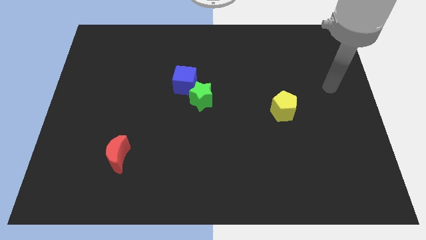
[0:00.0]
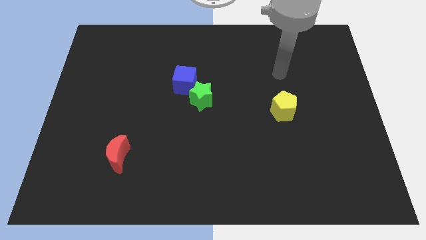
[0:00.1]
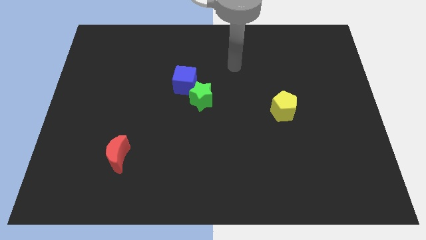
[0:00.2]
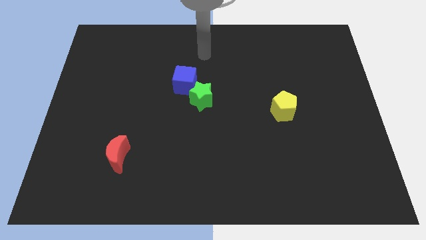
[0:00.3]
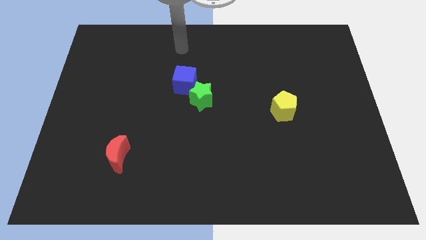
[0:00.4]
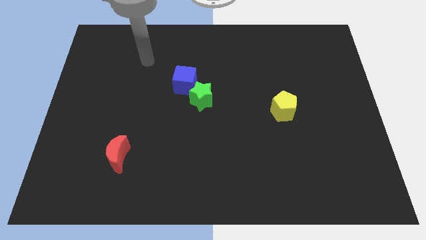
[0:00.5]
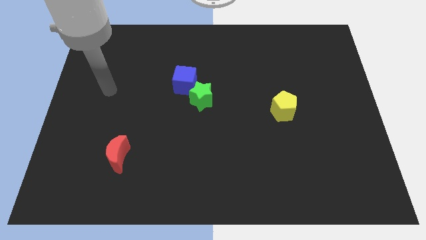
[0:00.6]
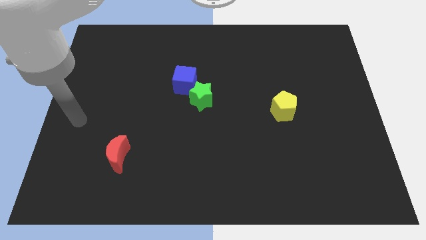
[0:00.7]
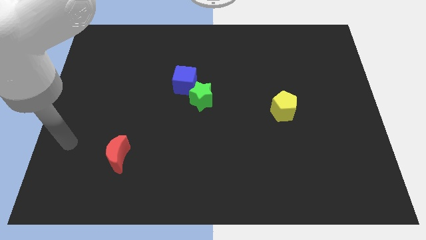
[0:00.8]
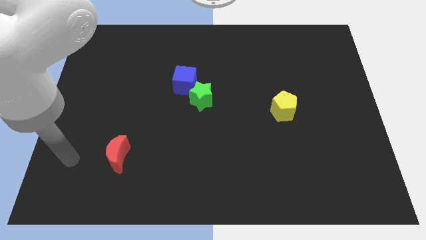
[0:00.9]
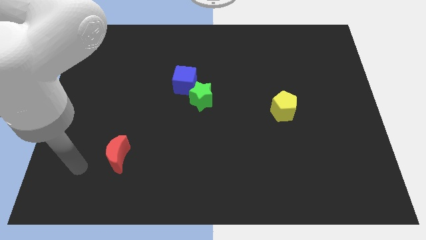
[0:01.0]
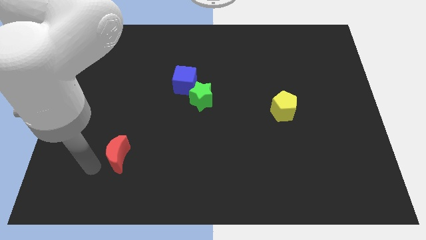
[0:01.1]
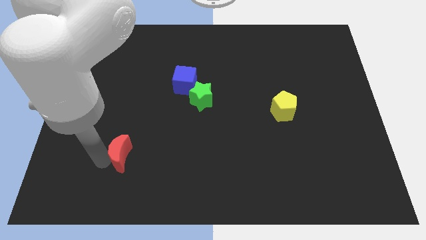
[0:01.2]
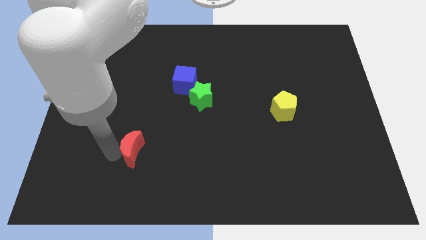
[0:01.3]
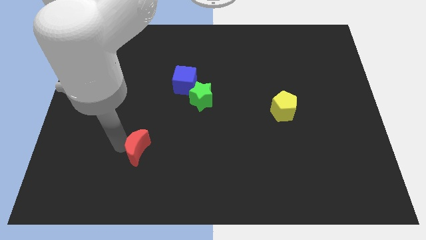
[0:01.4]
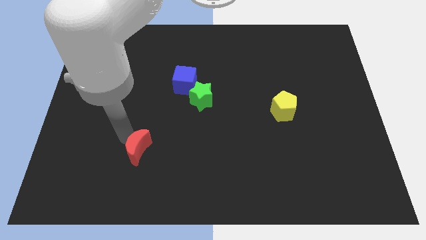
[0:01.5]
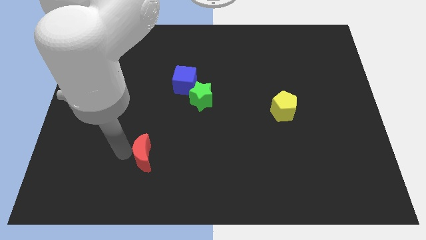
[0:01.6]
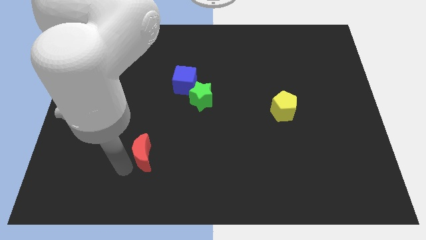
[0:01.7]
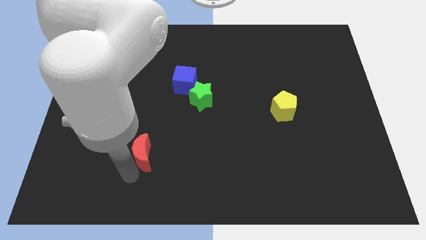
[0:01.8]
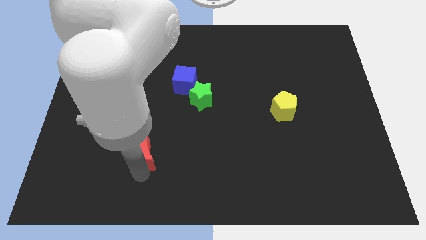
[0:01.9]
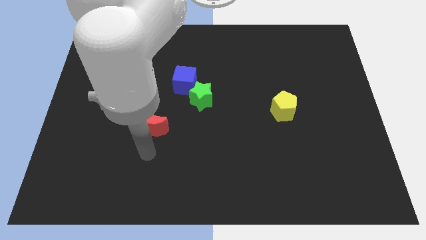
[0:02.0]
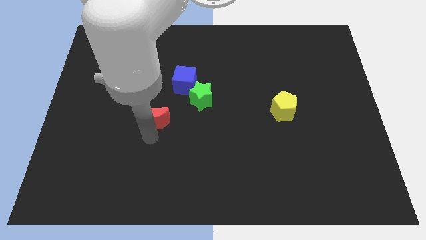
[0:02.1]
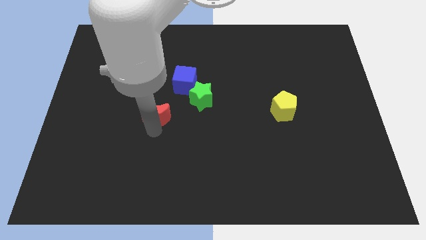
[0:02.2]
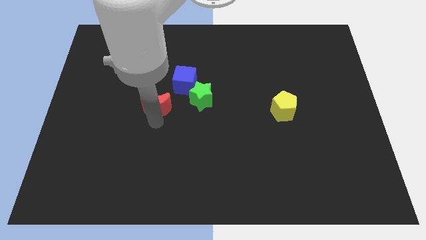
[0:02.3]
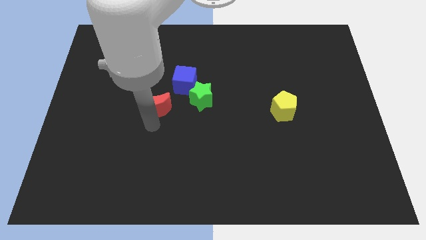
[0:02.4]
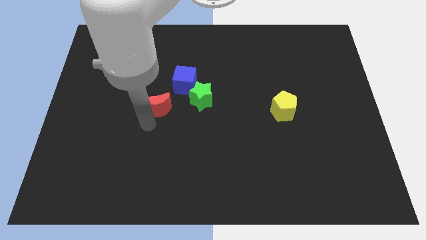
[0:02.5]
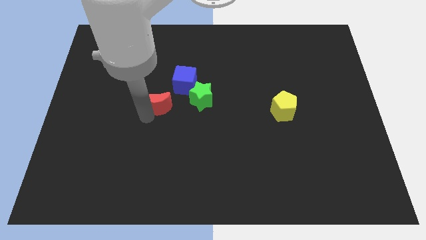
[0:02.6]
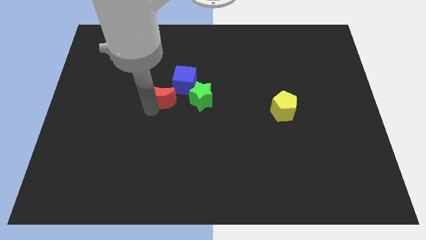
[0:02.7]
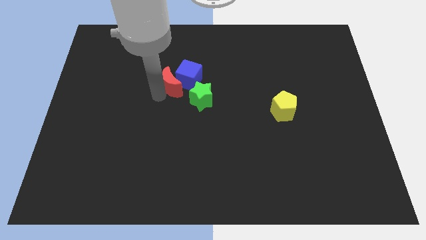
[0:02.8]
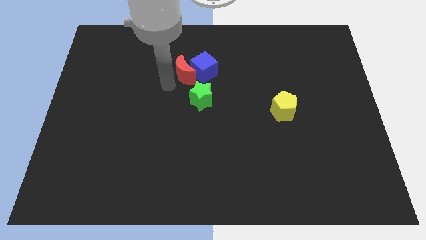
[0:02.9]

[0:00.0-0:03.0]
push the moon close to the blue block

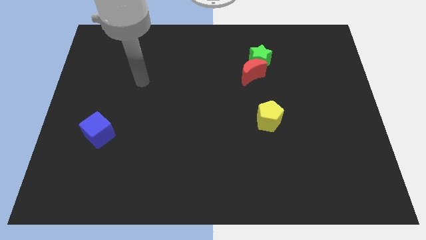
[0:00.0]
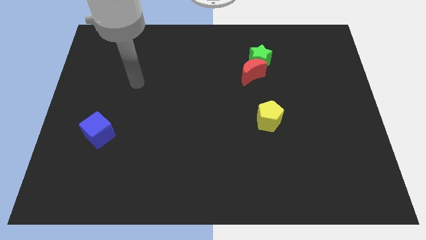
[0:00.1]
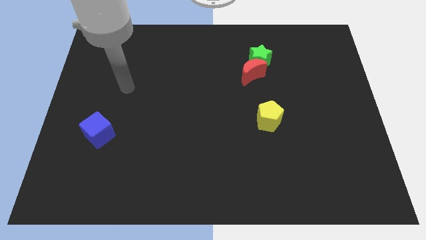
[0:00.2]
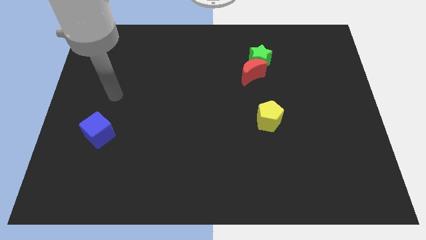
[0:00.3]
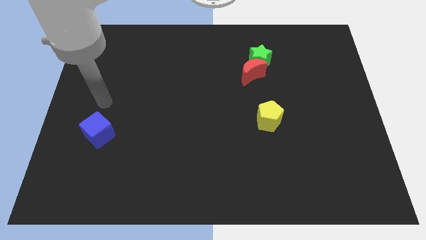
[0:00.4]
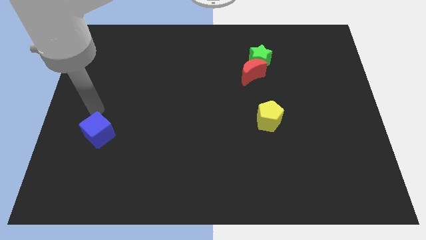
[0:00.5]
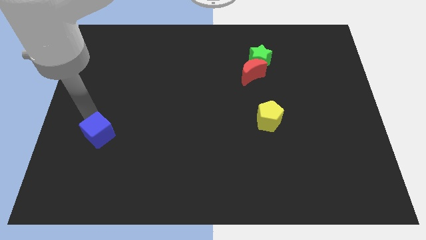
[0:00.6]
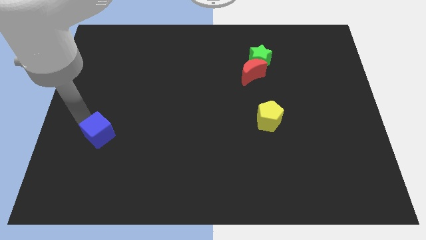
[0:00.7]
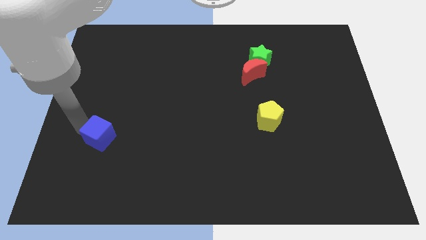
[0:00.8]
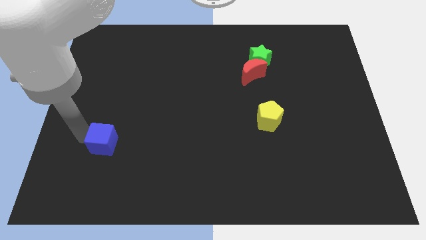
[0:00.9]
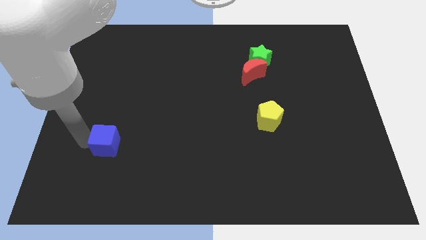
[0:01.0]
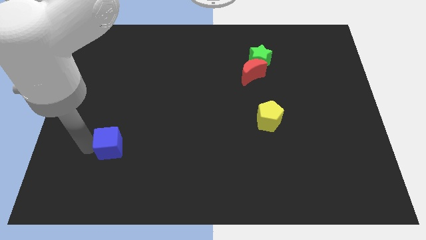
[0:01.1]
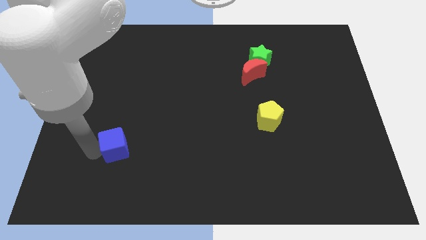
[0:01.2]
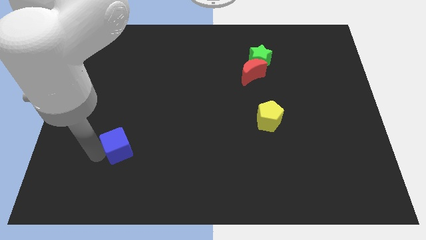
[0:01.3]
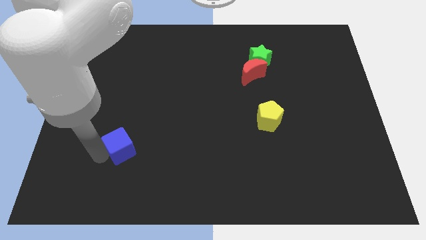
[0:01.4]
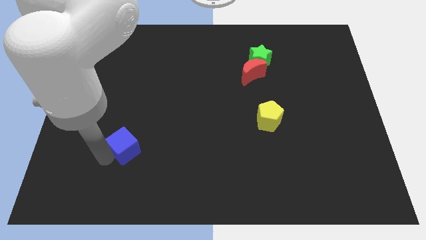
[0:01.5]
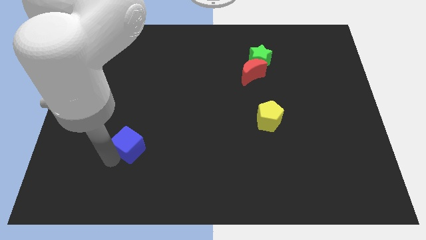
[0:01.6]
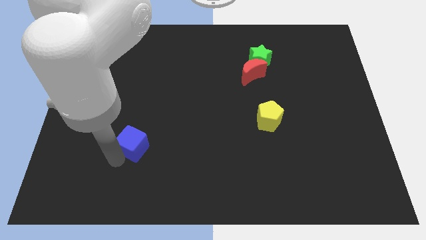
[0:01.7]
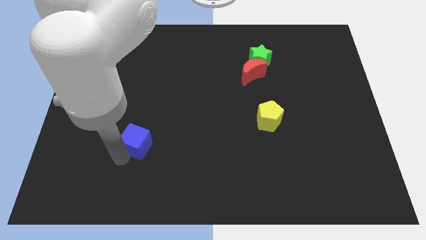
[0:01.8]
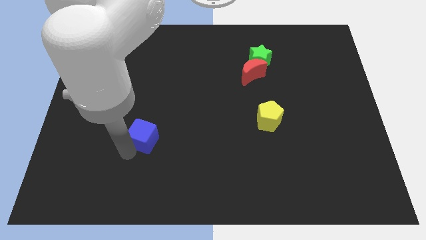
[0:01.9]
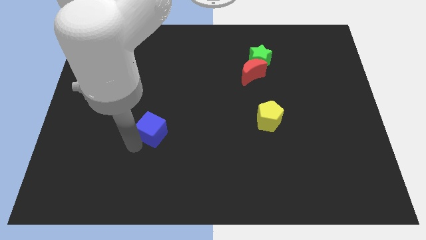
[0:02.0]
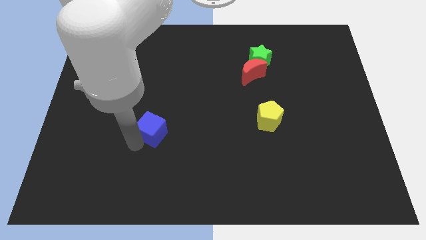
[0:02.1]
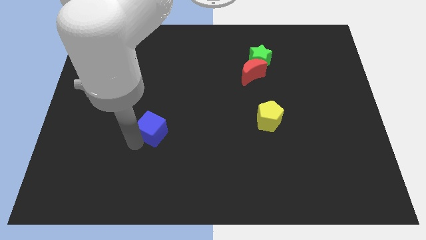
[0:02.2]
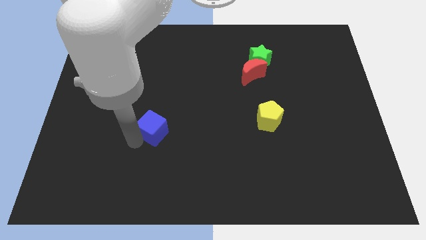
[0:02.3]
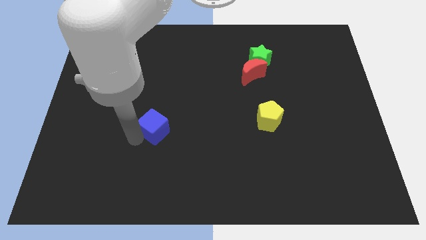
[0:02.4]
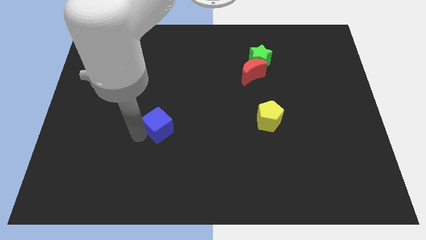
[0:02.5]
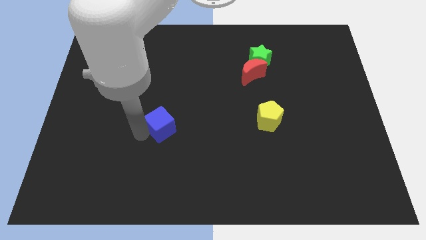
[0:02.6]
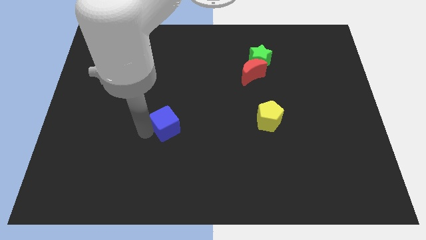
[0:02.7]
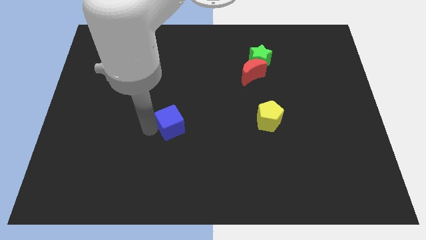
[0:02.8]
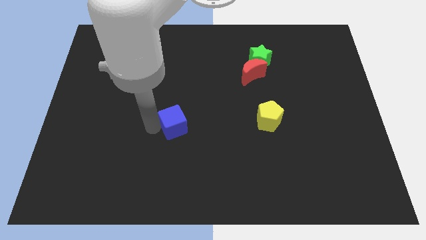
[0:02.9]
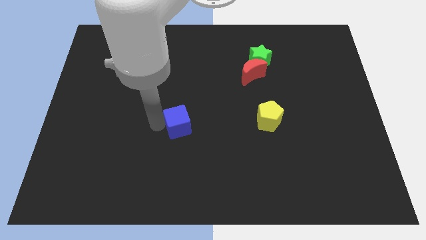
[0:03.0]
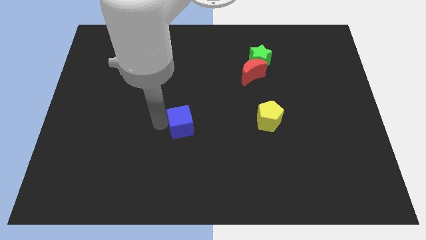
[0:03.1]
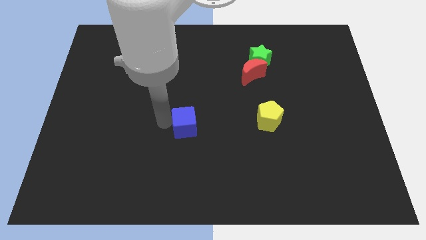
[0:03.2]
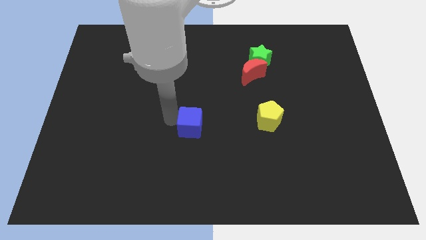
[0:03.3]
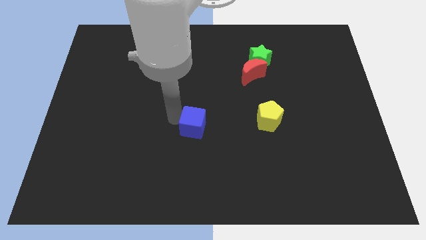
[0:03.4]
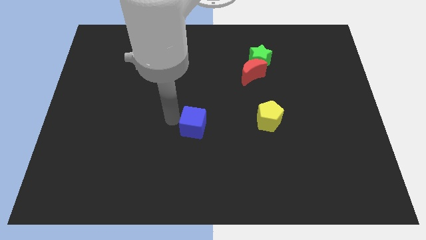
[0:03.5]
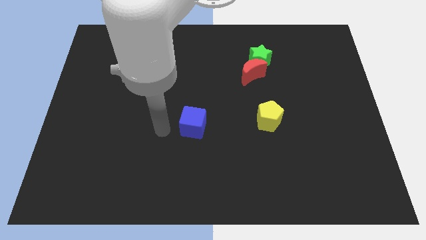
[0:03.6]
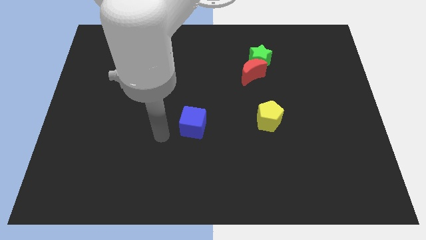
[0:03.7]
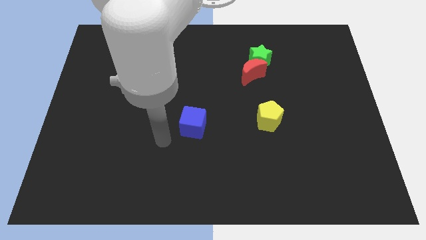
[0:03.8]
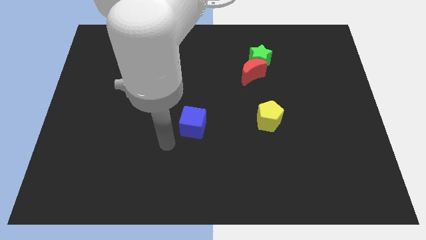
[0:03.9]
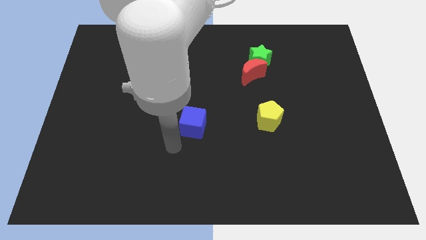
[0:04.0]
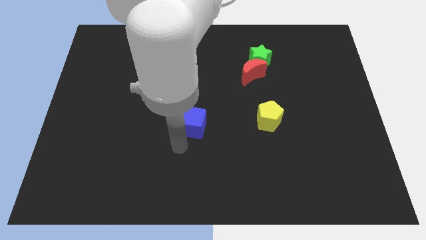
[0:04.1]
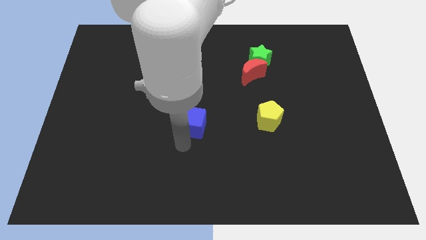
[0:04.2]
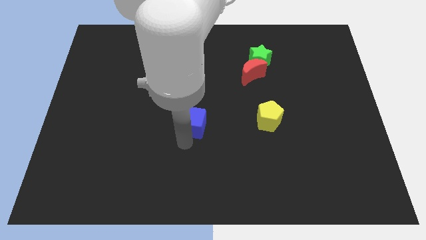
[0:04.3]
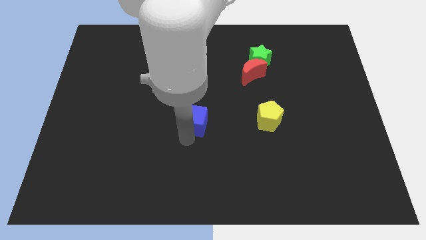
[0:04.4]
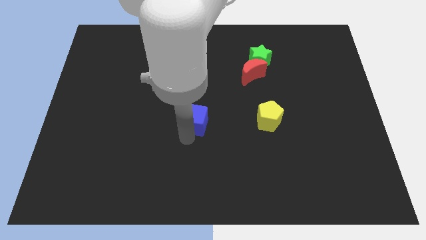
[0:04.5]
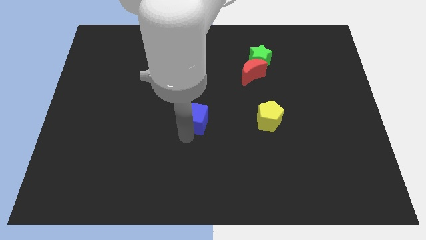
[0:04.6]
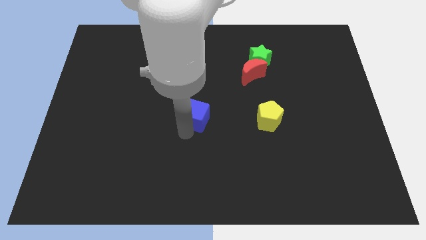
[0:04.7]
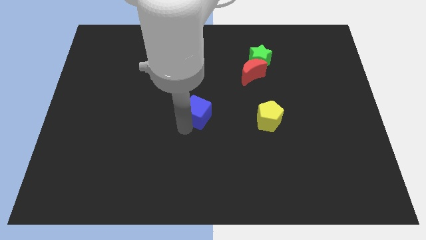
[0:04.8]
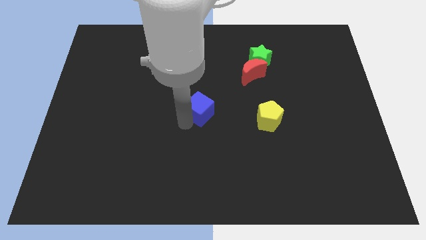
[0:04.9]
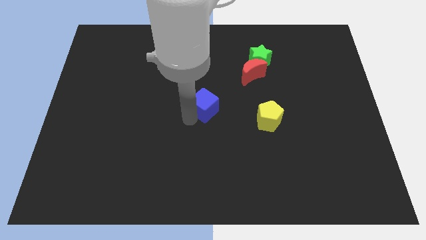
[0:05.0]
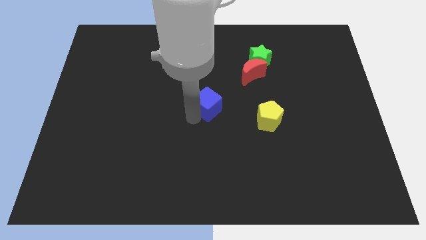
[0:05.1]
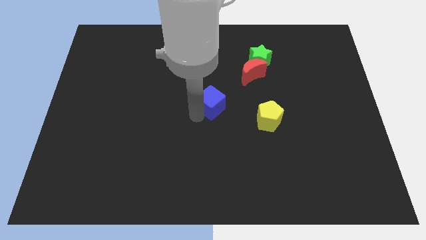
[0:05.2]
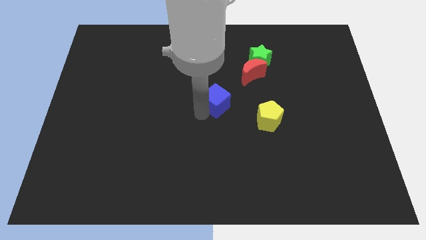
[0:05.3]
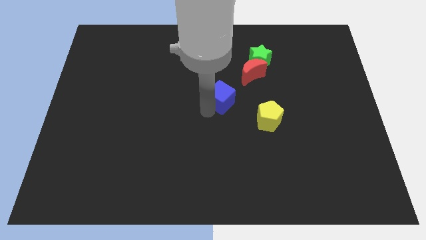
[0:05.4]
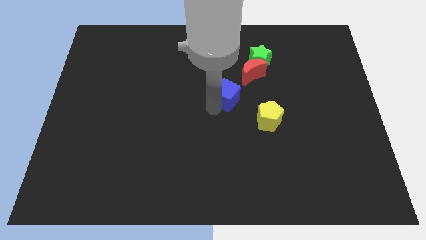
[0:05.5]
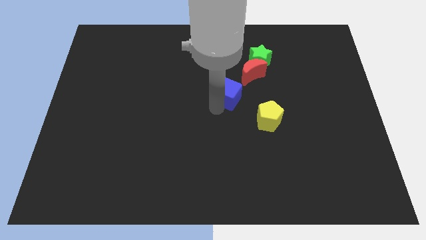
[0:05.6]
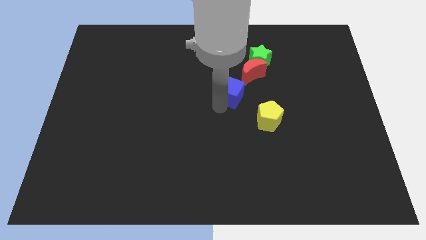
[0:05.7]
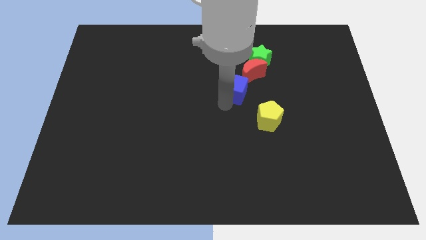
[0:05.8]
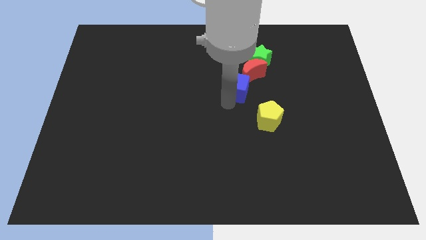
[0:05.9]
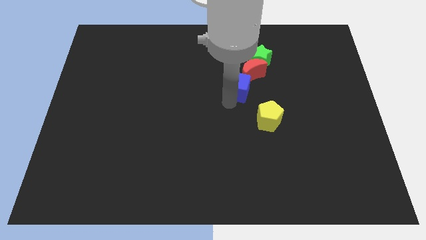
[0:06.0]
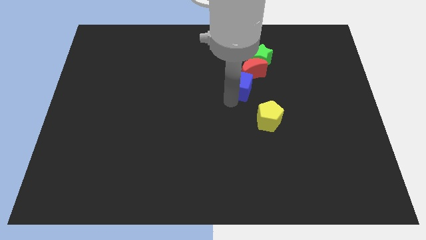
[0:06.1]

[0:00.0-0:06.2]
put the cube close to the red moon
